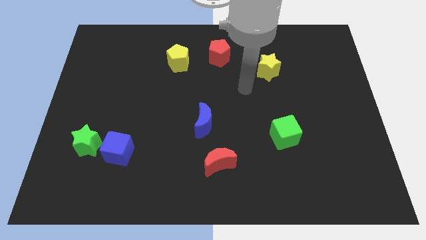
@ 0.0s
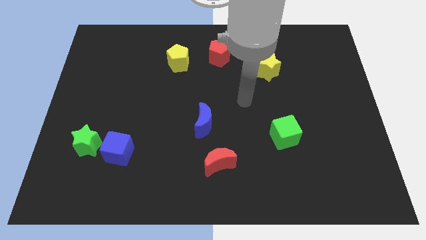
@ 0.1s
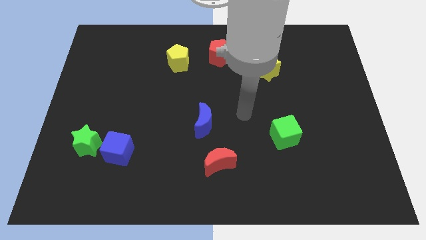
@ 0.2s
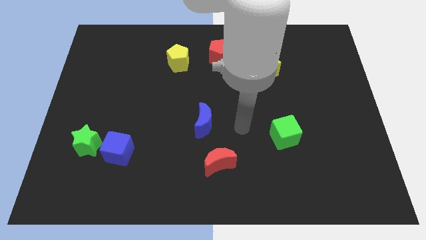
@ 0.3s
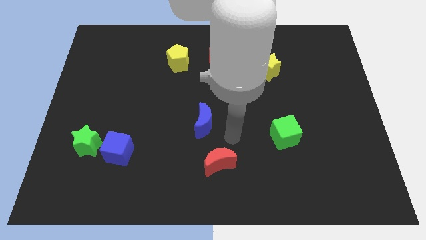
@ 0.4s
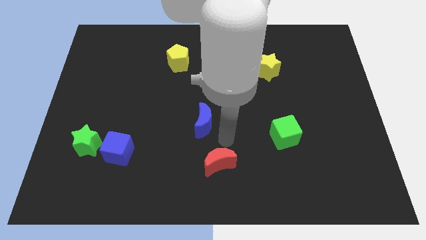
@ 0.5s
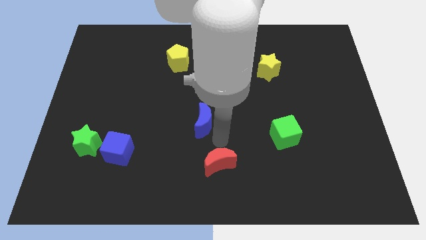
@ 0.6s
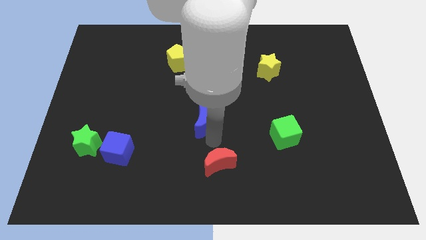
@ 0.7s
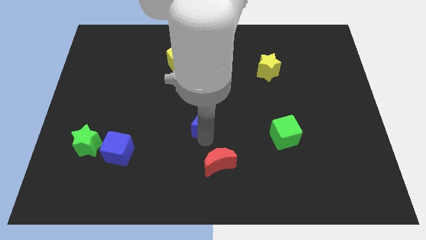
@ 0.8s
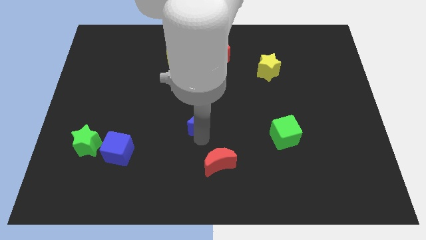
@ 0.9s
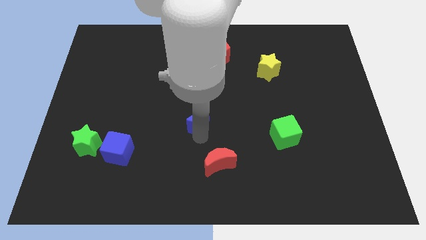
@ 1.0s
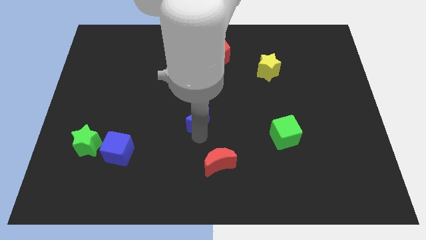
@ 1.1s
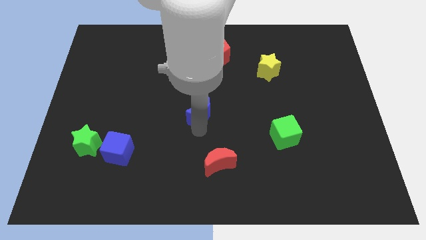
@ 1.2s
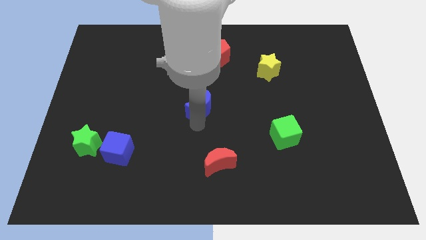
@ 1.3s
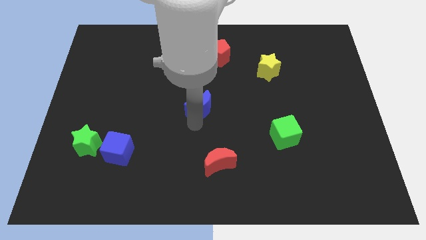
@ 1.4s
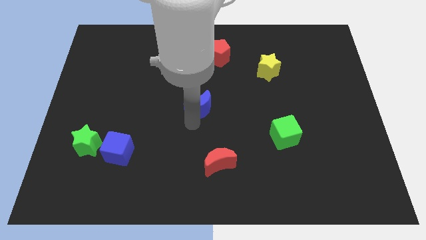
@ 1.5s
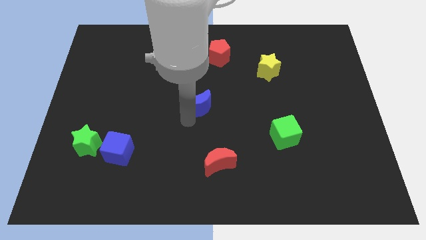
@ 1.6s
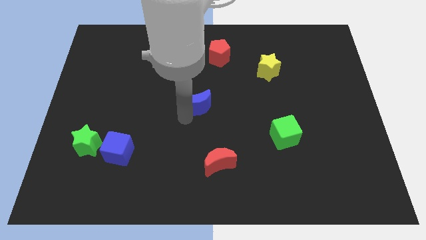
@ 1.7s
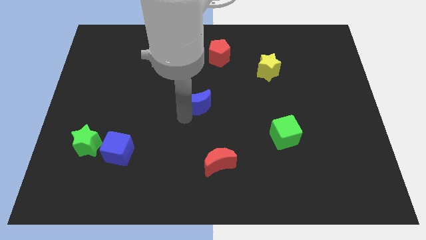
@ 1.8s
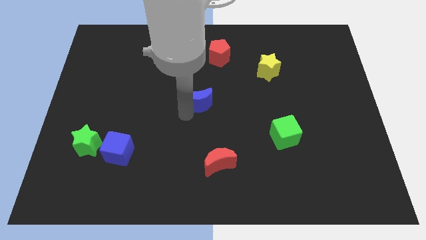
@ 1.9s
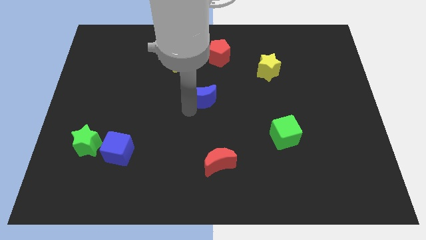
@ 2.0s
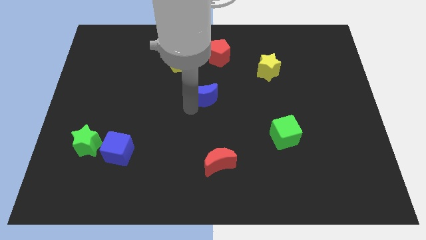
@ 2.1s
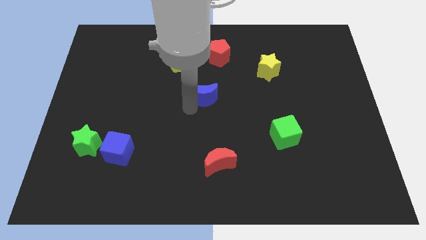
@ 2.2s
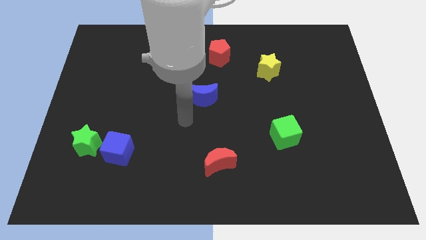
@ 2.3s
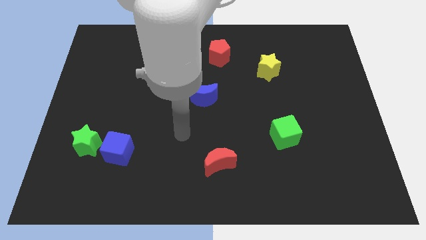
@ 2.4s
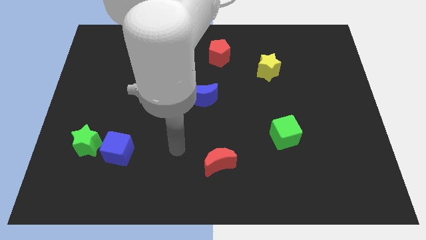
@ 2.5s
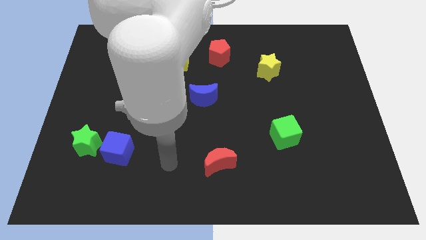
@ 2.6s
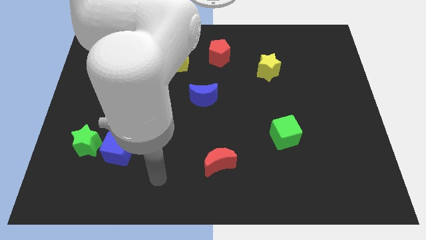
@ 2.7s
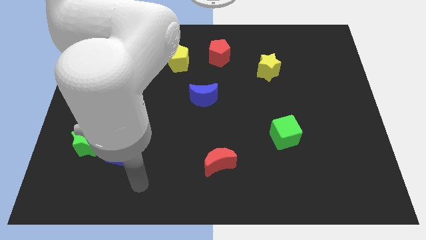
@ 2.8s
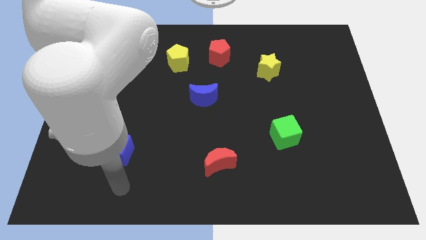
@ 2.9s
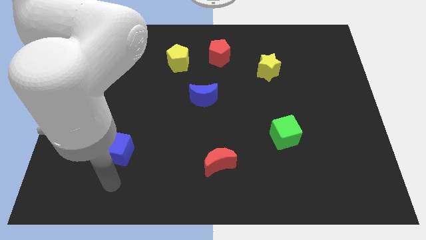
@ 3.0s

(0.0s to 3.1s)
push blue crescent slightly up

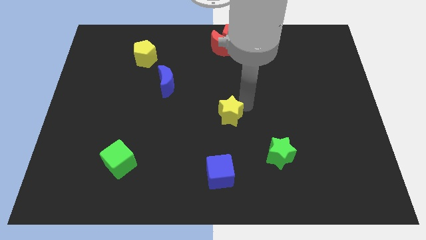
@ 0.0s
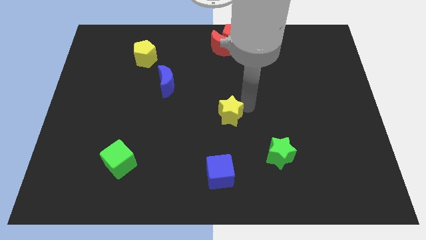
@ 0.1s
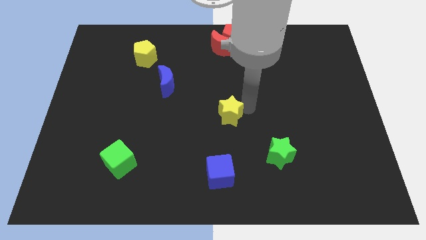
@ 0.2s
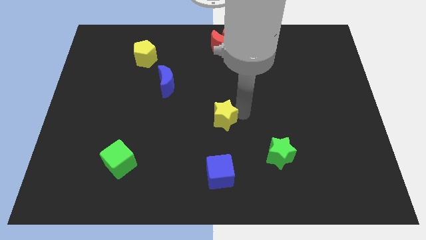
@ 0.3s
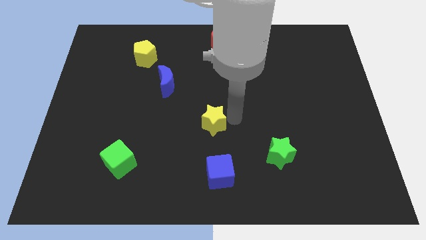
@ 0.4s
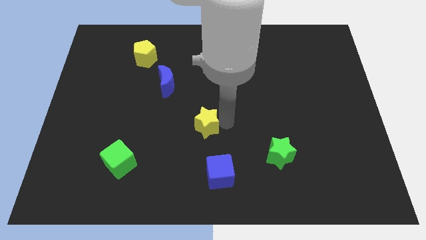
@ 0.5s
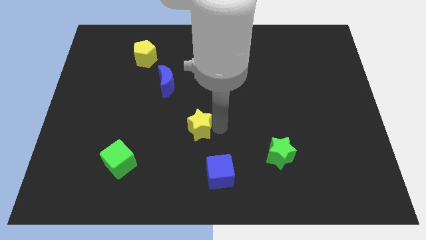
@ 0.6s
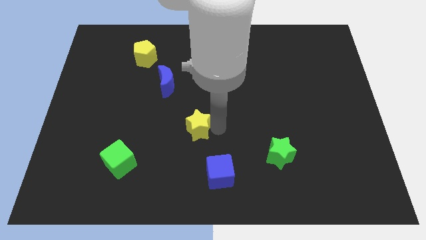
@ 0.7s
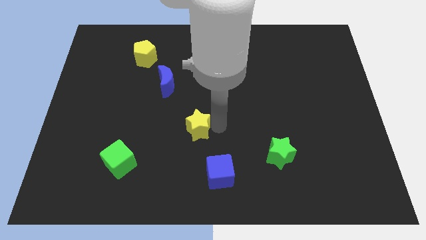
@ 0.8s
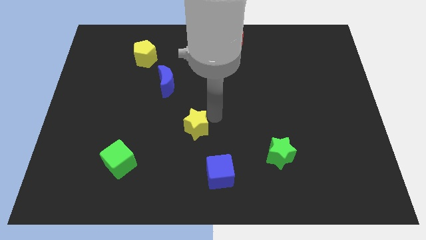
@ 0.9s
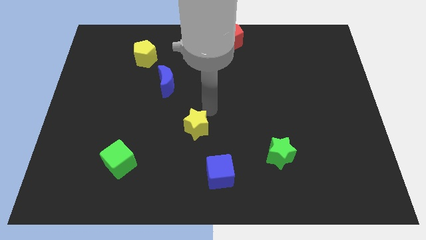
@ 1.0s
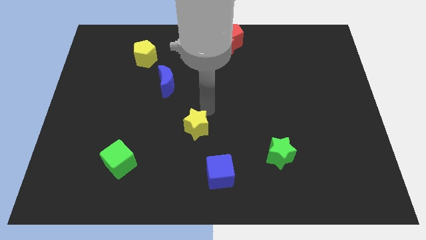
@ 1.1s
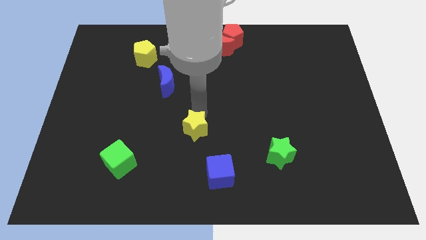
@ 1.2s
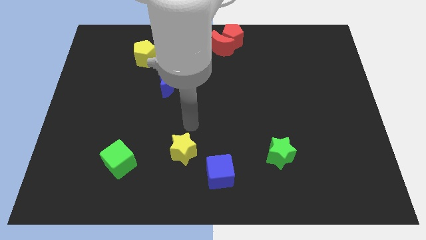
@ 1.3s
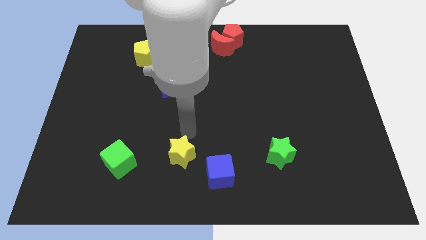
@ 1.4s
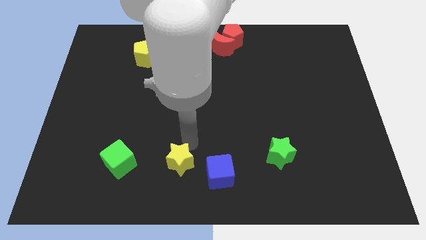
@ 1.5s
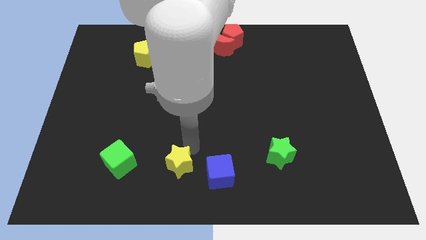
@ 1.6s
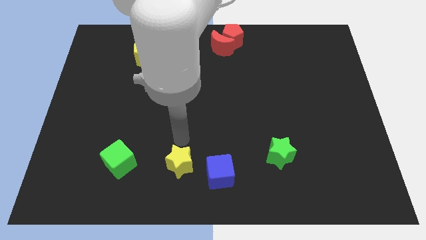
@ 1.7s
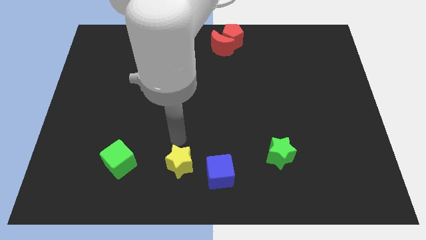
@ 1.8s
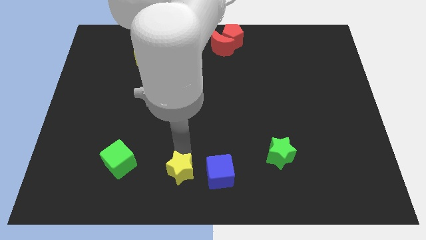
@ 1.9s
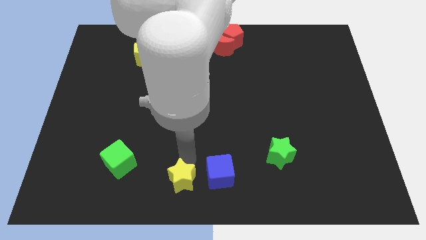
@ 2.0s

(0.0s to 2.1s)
move yellow star towards the green cube

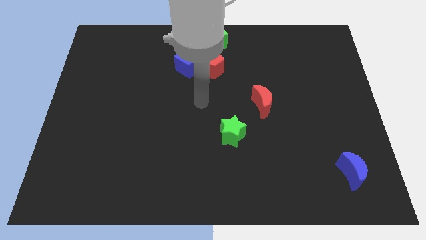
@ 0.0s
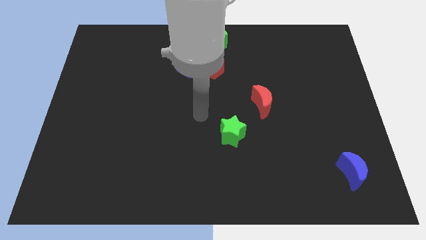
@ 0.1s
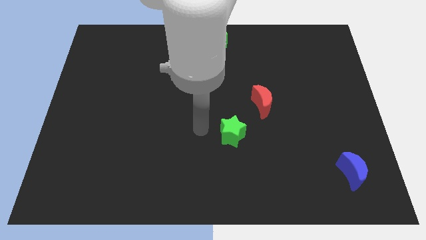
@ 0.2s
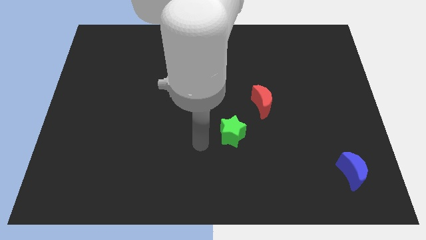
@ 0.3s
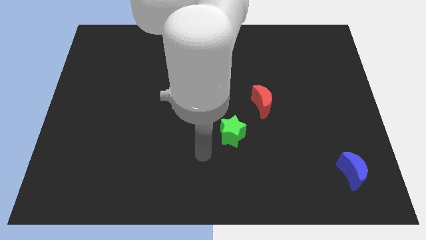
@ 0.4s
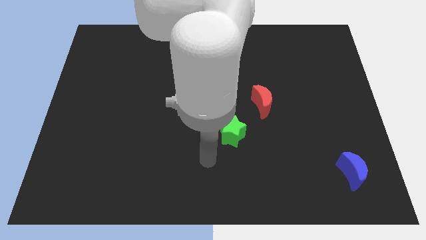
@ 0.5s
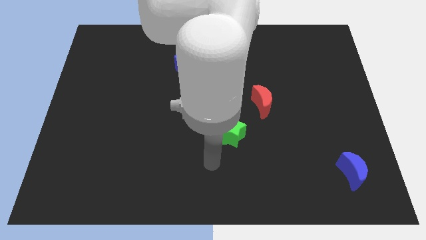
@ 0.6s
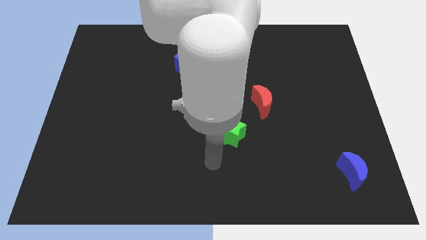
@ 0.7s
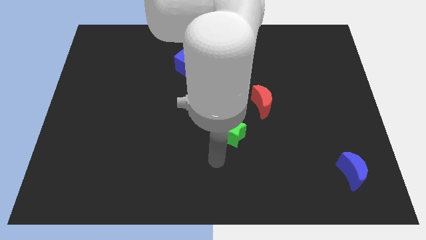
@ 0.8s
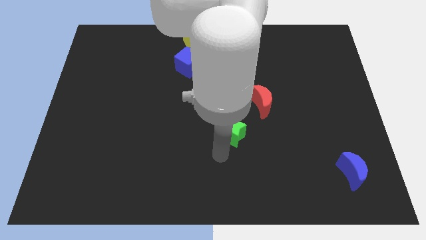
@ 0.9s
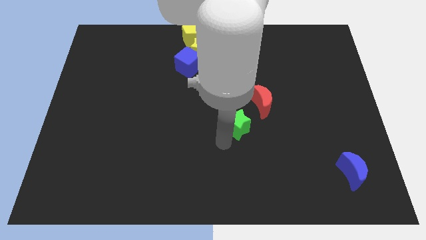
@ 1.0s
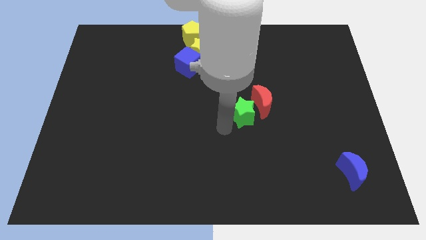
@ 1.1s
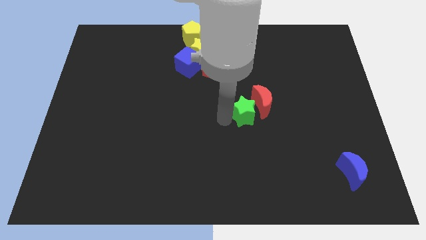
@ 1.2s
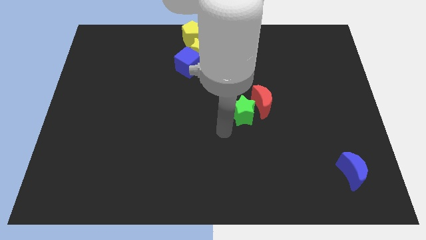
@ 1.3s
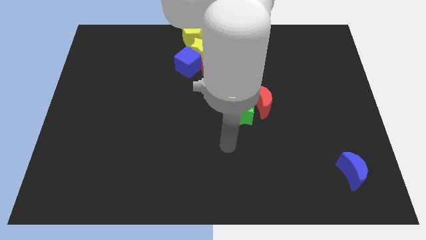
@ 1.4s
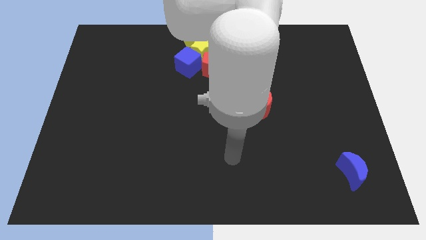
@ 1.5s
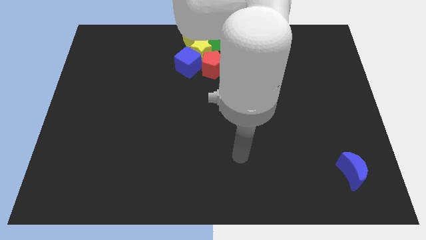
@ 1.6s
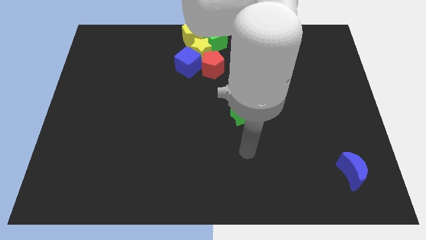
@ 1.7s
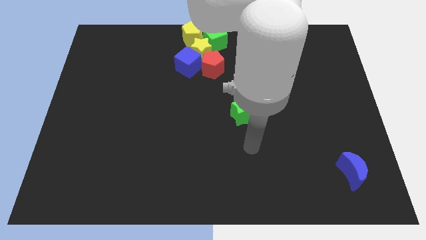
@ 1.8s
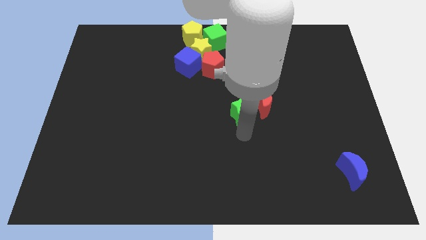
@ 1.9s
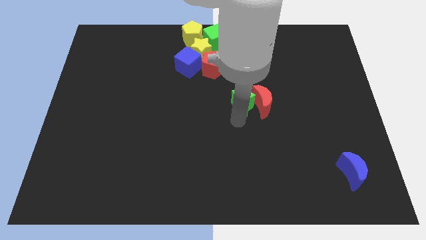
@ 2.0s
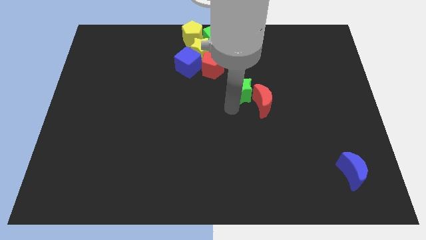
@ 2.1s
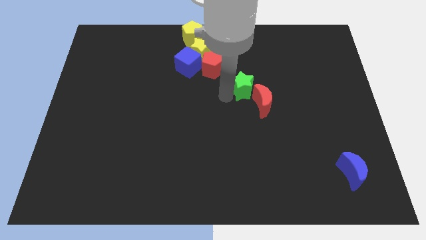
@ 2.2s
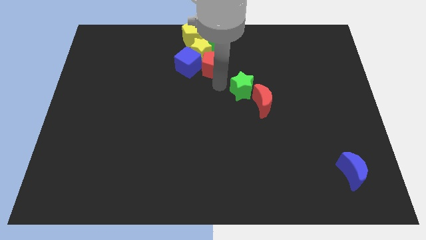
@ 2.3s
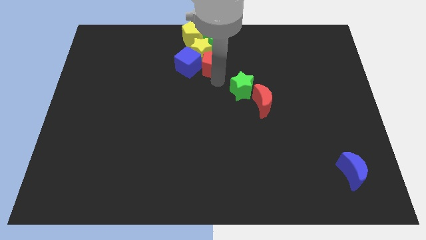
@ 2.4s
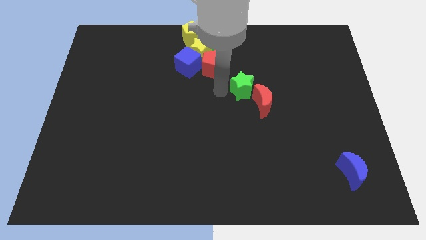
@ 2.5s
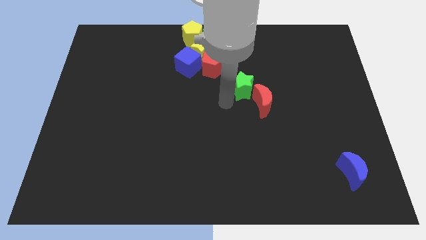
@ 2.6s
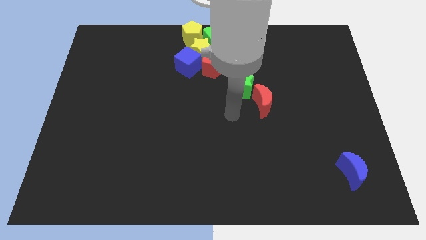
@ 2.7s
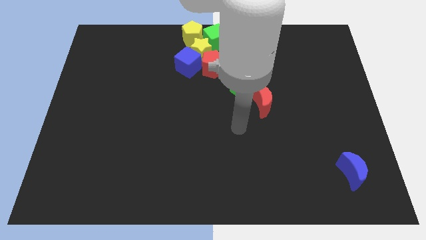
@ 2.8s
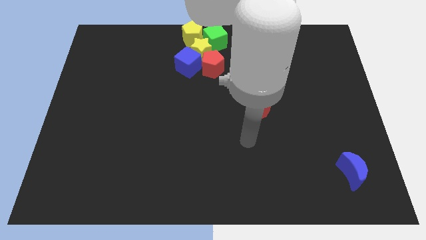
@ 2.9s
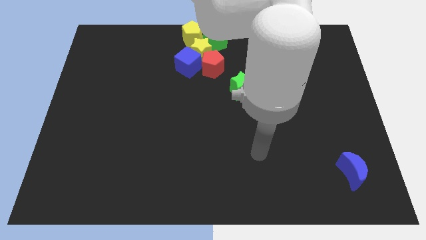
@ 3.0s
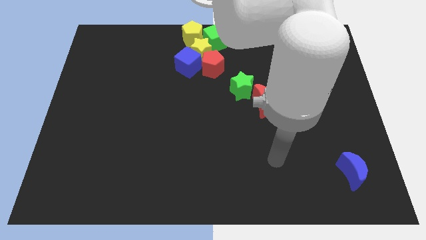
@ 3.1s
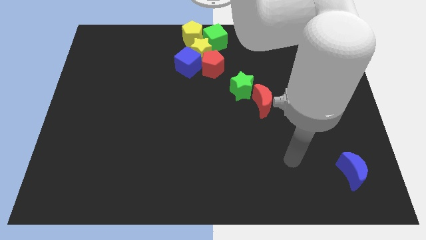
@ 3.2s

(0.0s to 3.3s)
place green star on top left of the red crescent

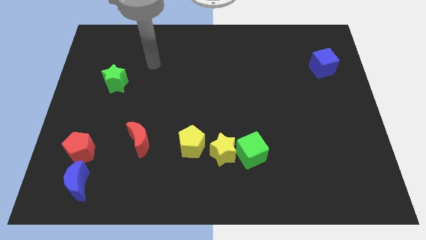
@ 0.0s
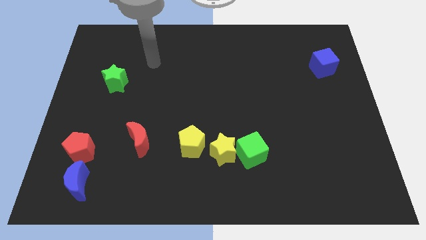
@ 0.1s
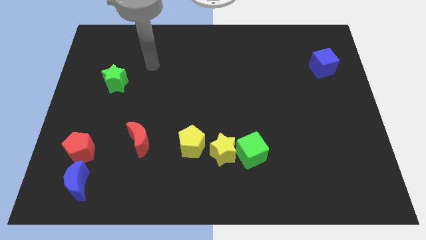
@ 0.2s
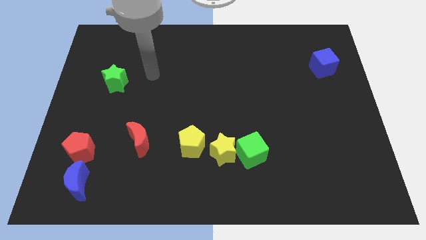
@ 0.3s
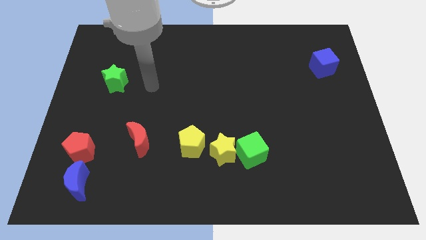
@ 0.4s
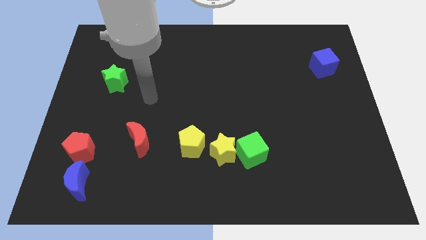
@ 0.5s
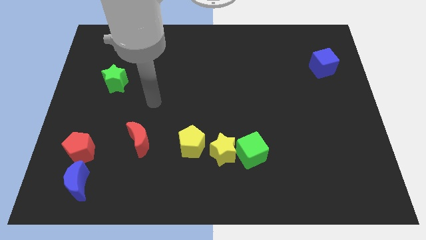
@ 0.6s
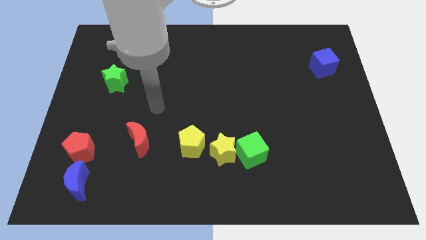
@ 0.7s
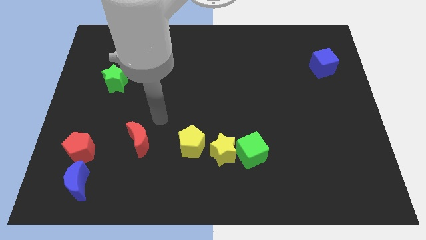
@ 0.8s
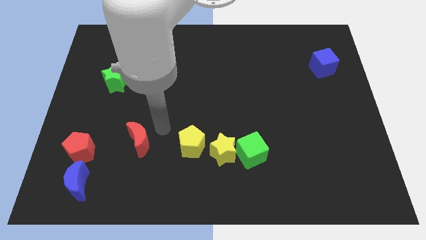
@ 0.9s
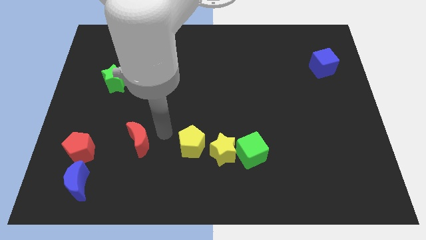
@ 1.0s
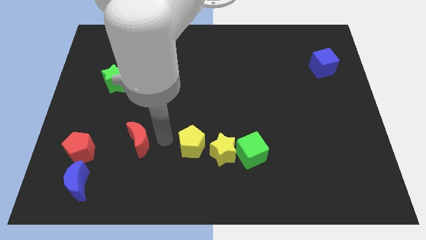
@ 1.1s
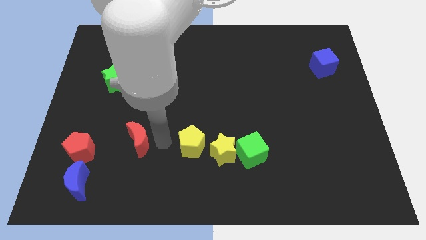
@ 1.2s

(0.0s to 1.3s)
place arm in between red moon and yellow pentagon
